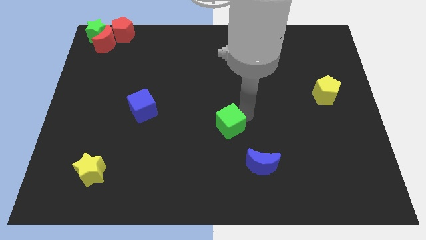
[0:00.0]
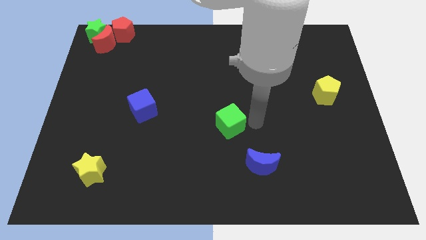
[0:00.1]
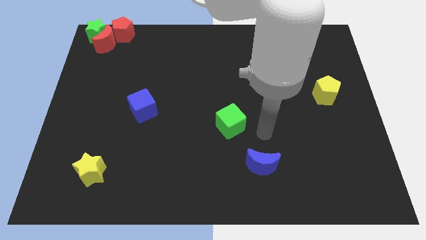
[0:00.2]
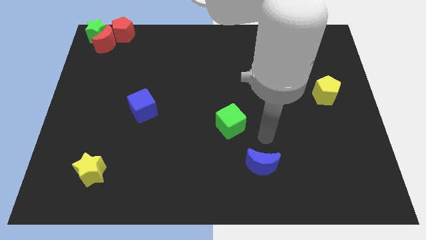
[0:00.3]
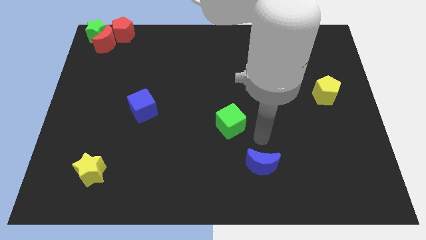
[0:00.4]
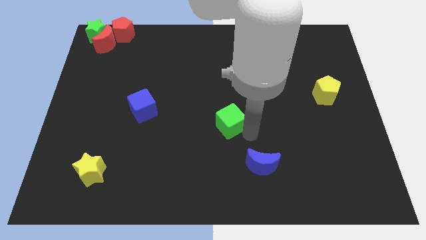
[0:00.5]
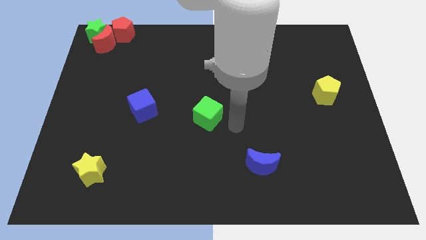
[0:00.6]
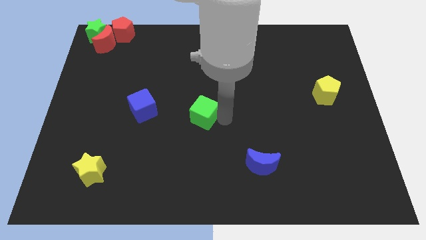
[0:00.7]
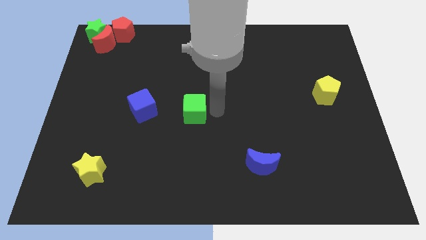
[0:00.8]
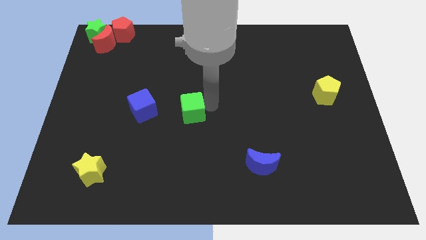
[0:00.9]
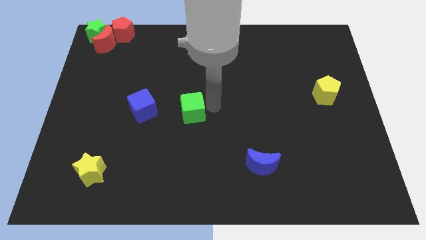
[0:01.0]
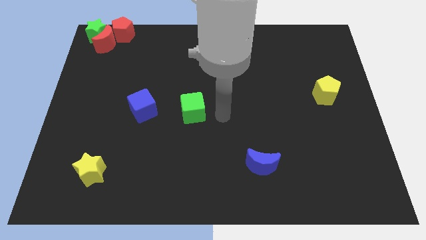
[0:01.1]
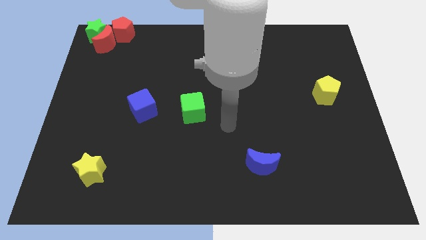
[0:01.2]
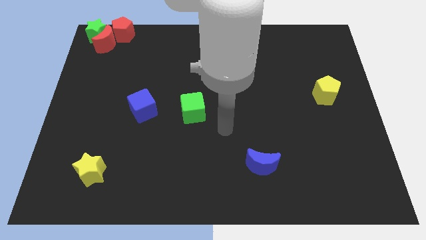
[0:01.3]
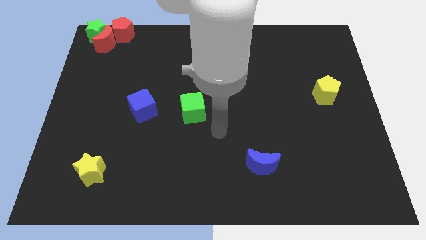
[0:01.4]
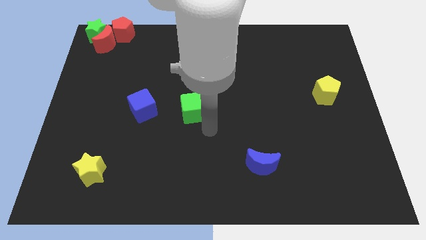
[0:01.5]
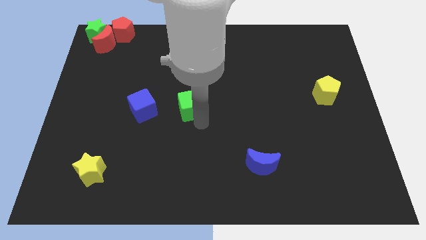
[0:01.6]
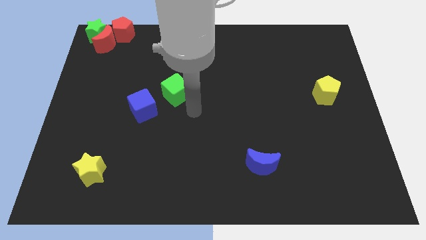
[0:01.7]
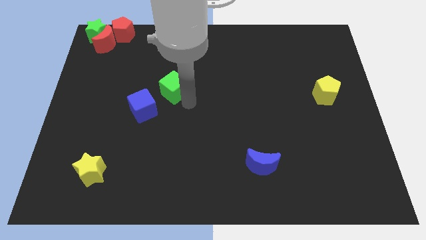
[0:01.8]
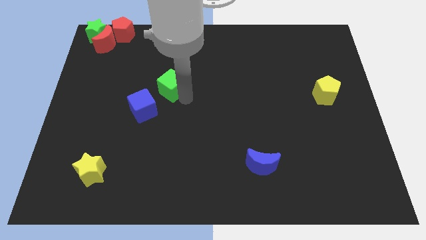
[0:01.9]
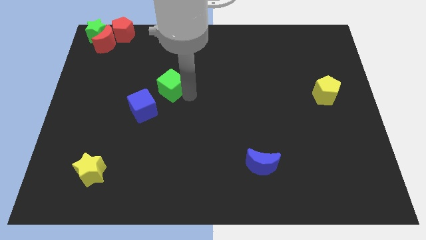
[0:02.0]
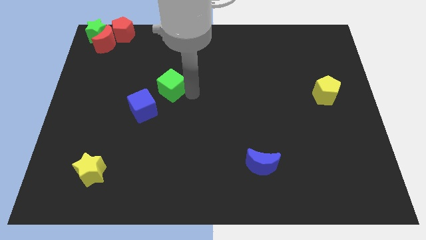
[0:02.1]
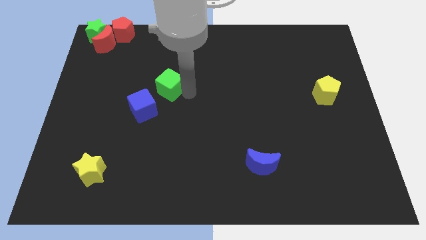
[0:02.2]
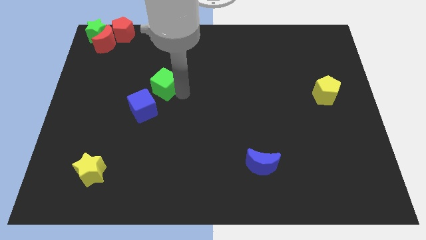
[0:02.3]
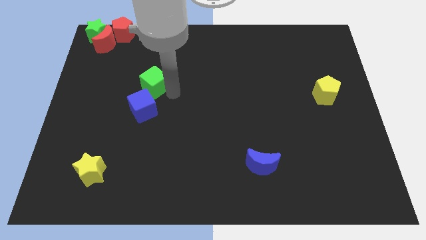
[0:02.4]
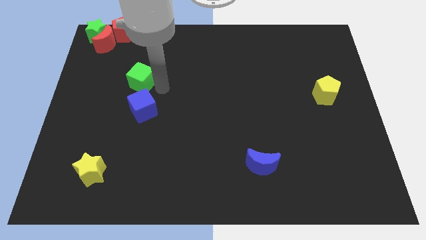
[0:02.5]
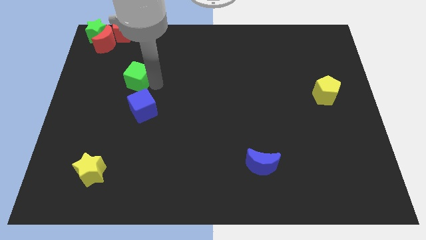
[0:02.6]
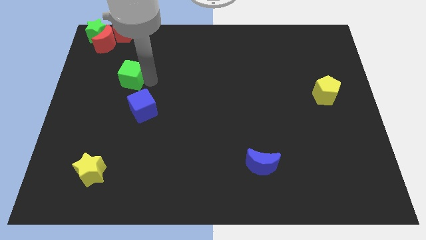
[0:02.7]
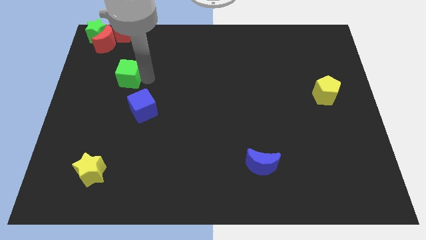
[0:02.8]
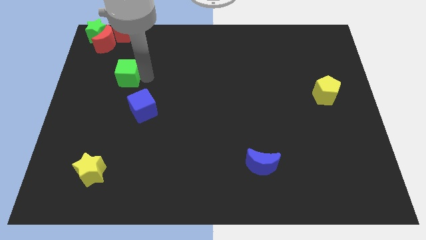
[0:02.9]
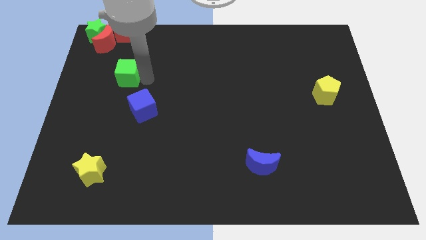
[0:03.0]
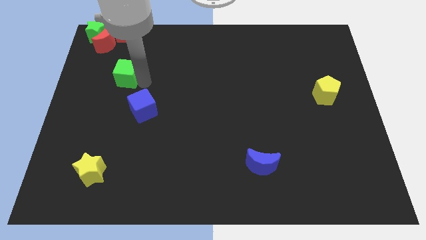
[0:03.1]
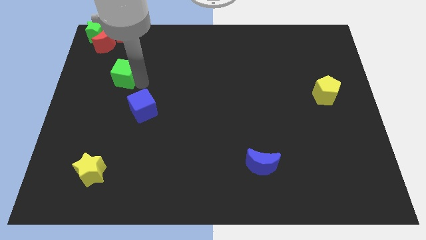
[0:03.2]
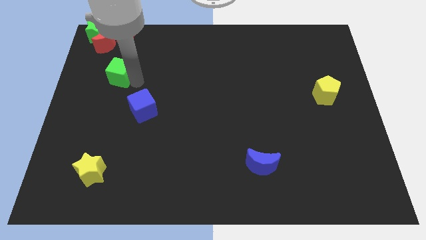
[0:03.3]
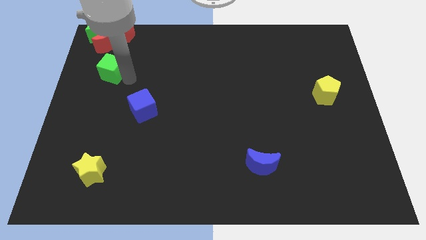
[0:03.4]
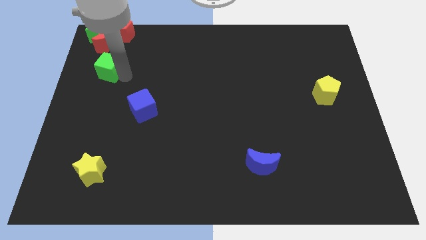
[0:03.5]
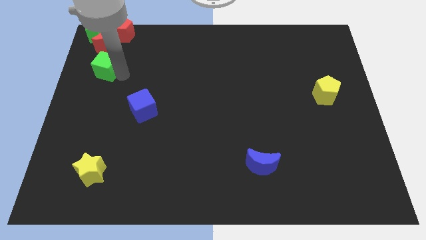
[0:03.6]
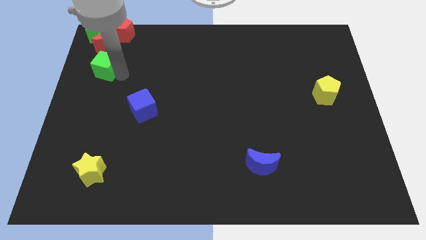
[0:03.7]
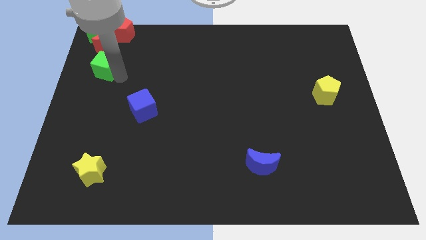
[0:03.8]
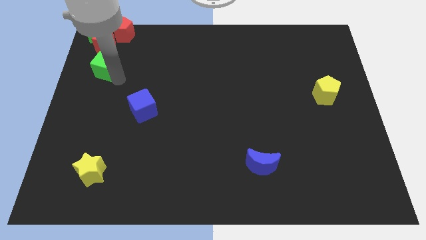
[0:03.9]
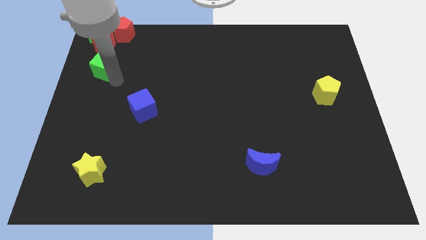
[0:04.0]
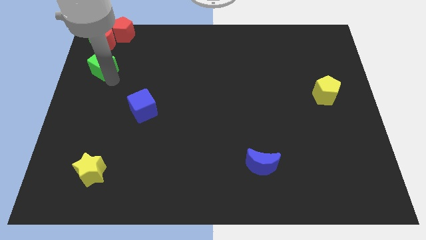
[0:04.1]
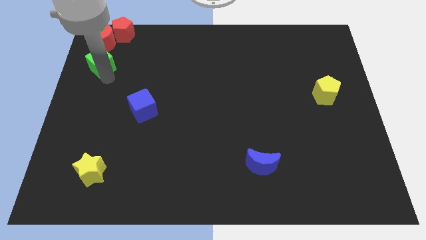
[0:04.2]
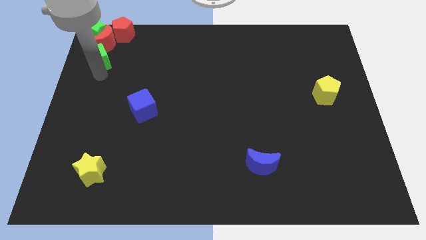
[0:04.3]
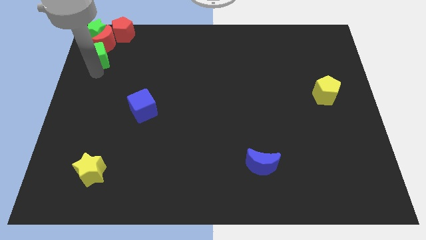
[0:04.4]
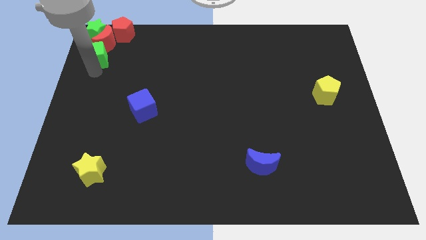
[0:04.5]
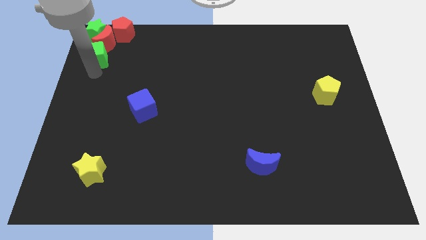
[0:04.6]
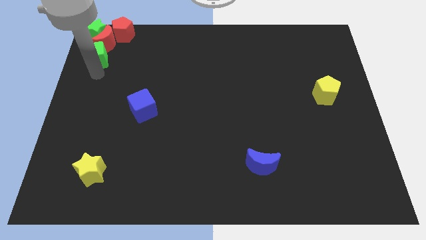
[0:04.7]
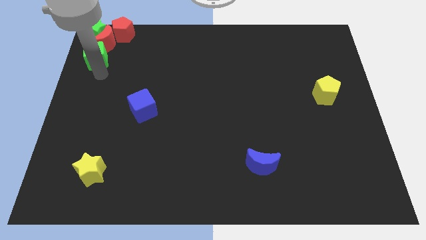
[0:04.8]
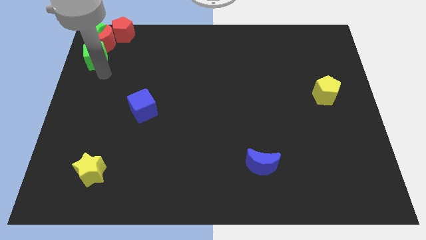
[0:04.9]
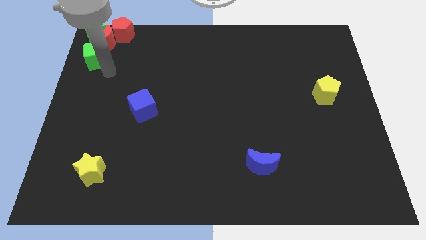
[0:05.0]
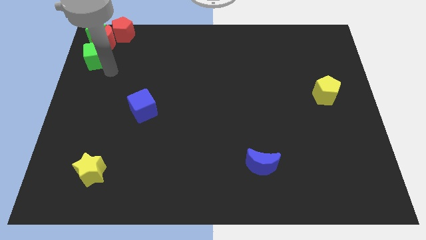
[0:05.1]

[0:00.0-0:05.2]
place green cube below the red crescent

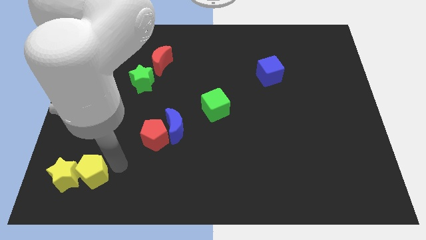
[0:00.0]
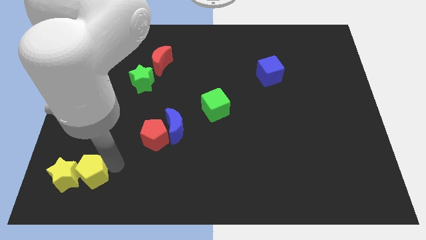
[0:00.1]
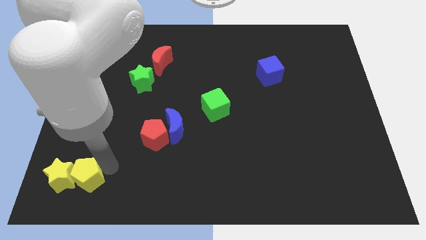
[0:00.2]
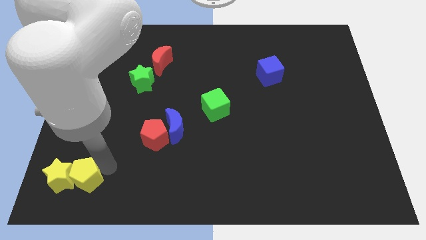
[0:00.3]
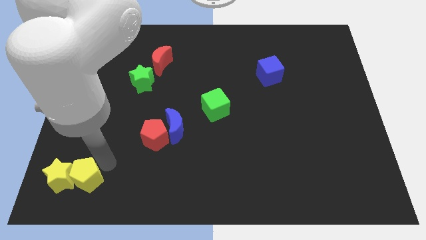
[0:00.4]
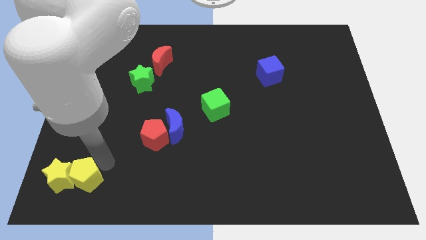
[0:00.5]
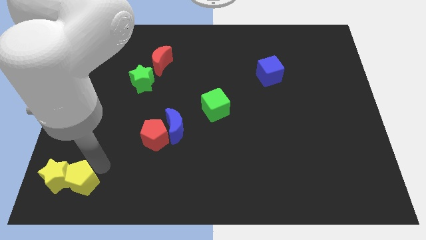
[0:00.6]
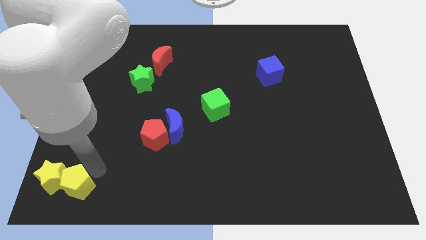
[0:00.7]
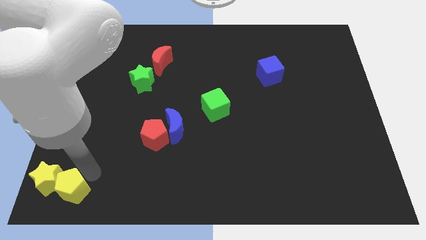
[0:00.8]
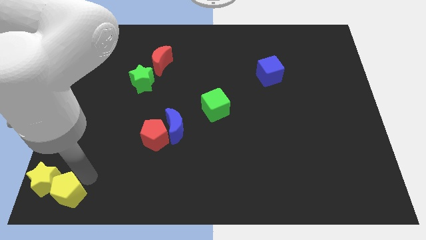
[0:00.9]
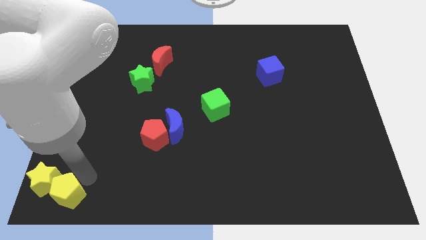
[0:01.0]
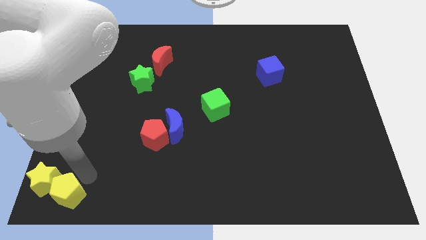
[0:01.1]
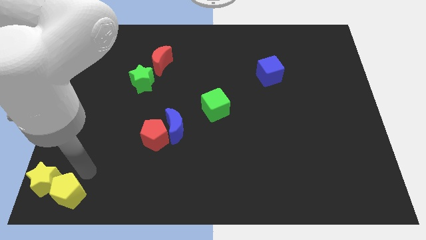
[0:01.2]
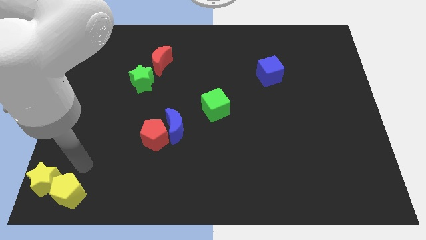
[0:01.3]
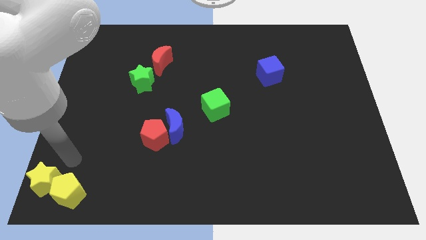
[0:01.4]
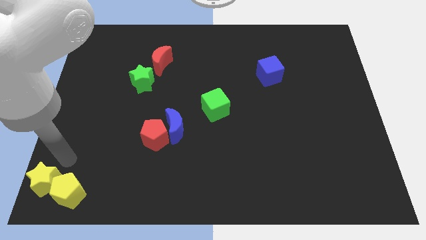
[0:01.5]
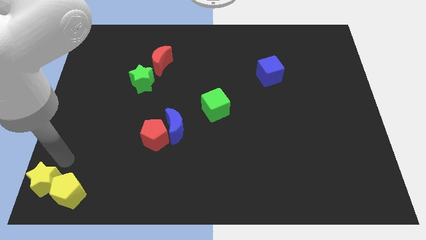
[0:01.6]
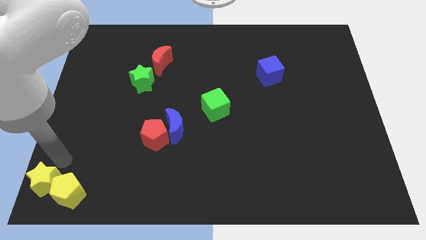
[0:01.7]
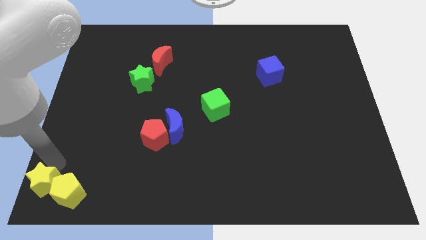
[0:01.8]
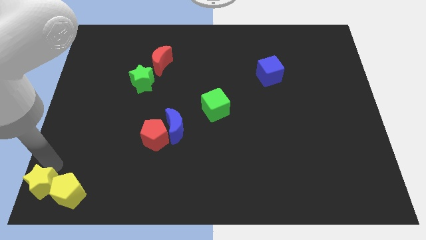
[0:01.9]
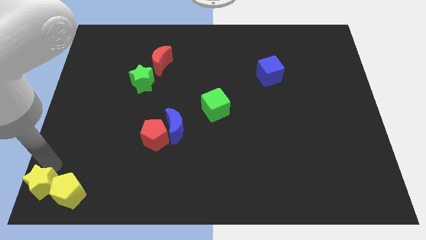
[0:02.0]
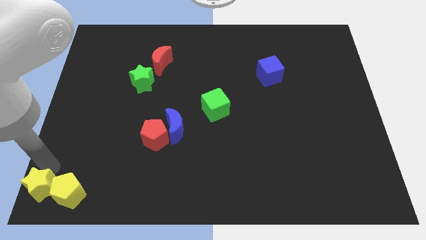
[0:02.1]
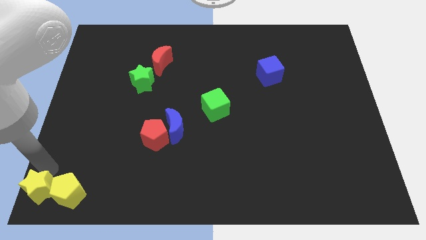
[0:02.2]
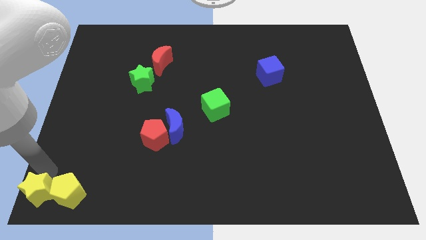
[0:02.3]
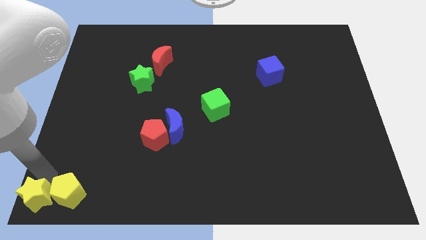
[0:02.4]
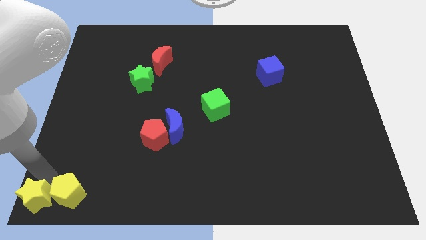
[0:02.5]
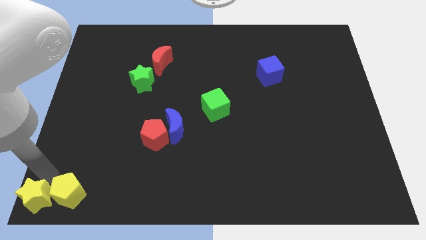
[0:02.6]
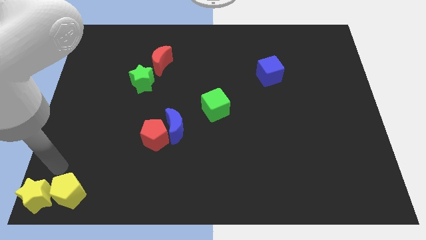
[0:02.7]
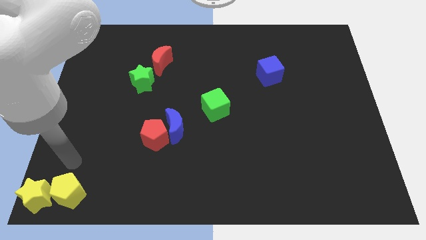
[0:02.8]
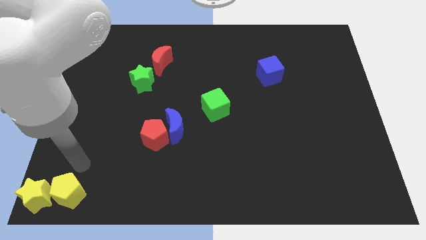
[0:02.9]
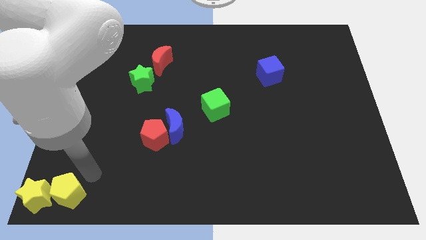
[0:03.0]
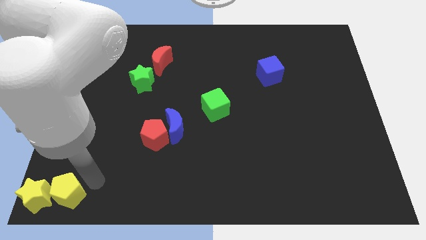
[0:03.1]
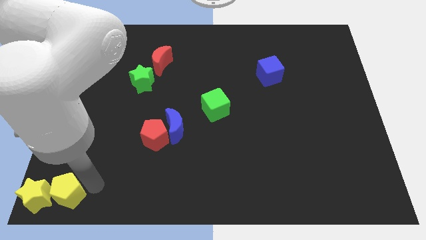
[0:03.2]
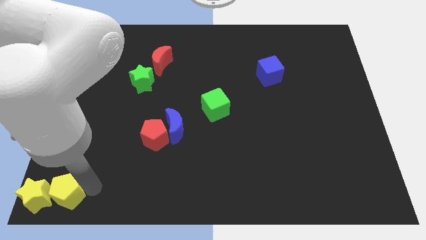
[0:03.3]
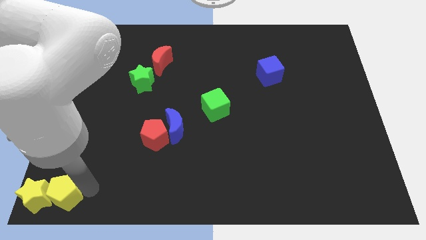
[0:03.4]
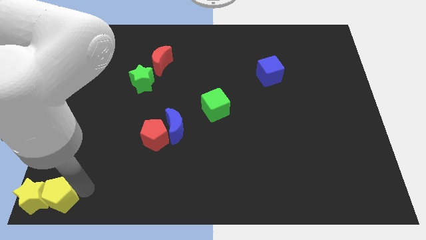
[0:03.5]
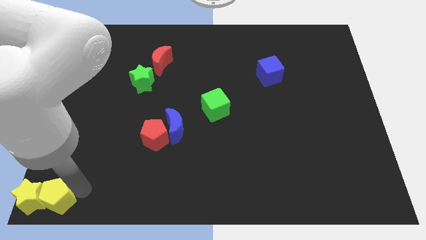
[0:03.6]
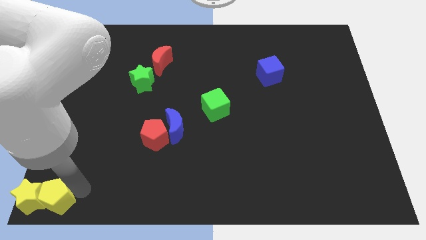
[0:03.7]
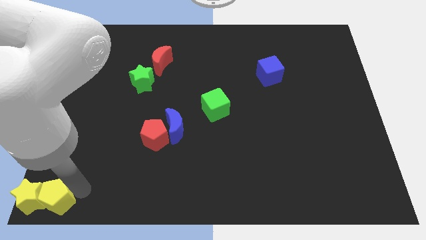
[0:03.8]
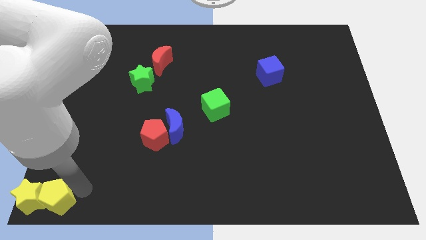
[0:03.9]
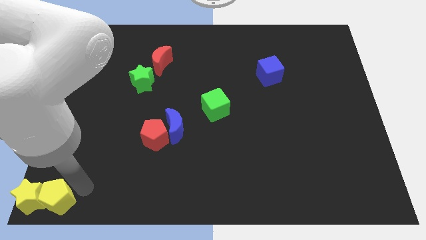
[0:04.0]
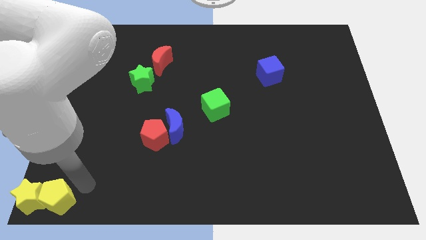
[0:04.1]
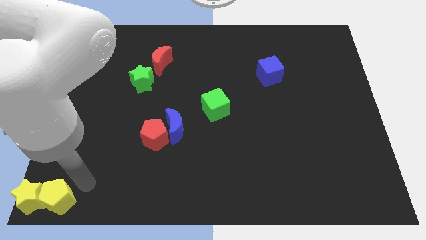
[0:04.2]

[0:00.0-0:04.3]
group up the yellow block at the bottom left corner of the board
